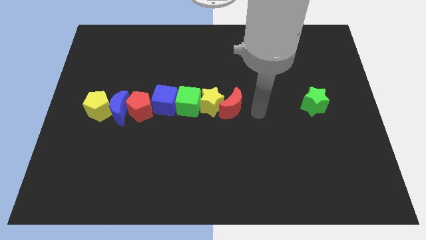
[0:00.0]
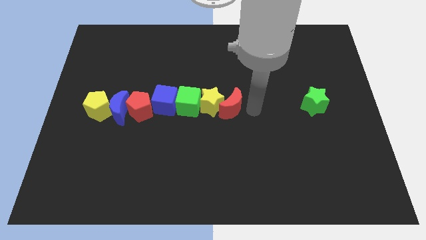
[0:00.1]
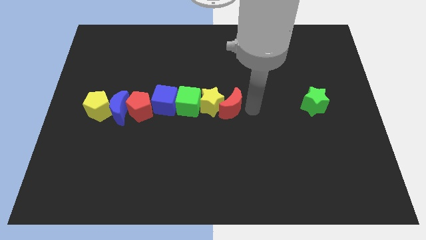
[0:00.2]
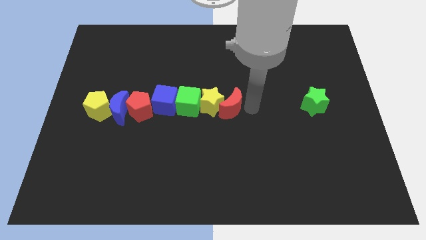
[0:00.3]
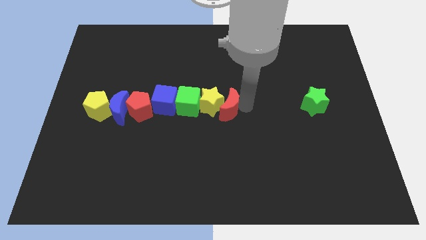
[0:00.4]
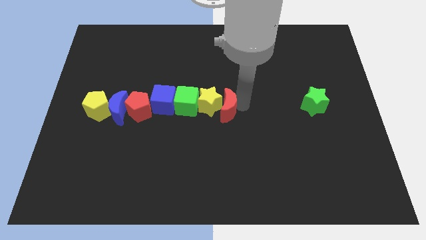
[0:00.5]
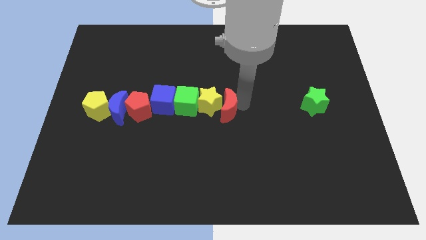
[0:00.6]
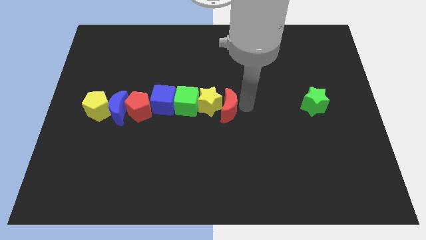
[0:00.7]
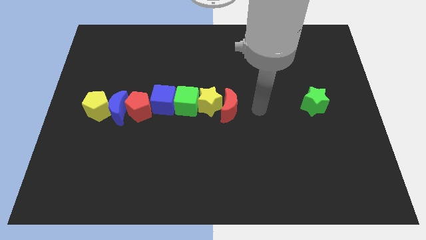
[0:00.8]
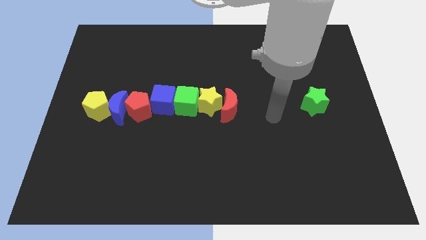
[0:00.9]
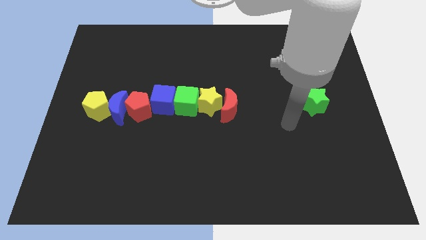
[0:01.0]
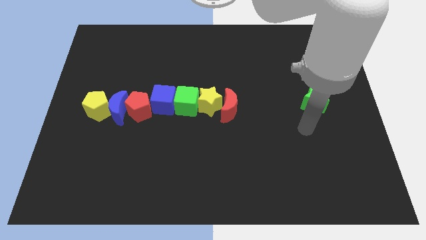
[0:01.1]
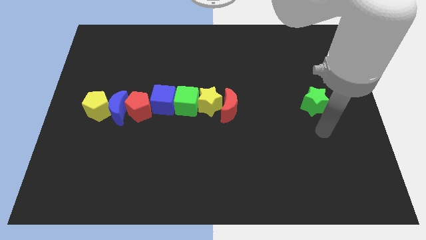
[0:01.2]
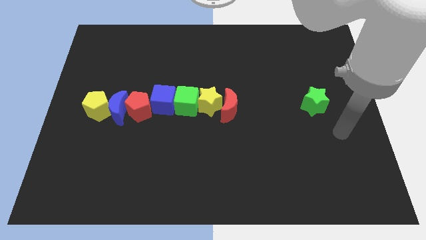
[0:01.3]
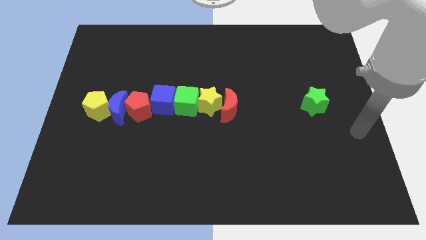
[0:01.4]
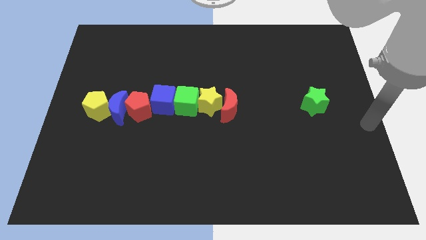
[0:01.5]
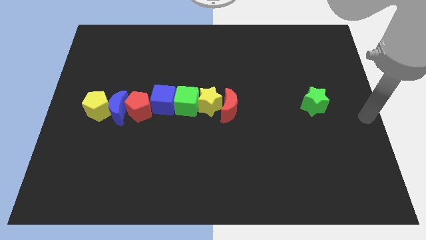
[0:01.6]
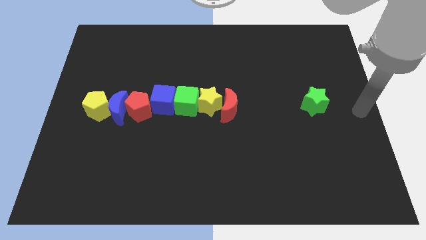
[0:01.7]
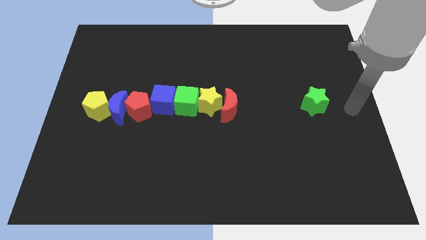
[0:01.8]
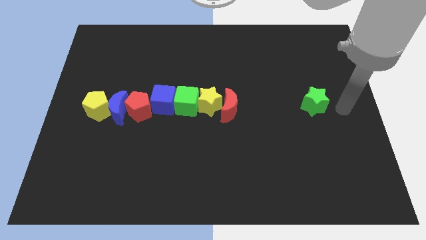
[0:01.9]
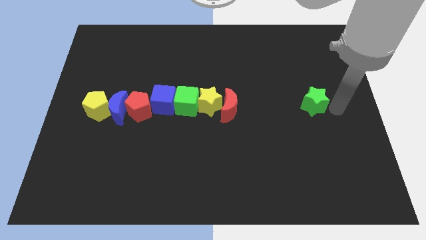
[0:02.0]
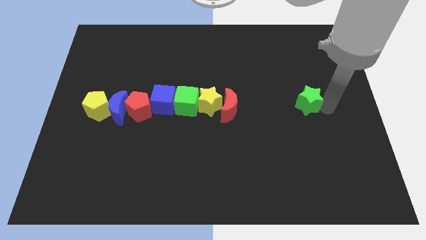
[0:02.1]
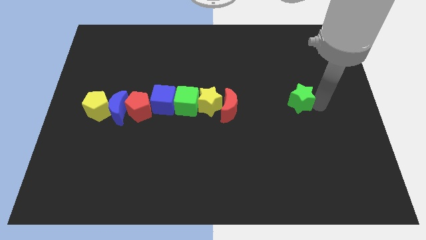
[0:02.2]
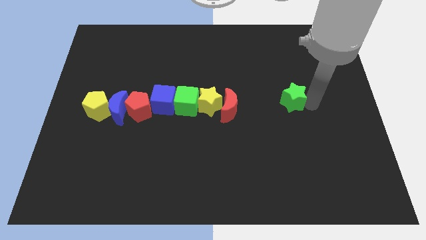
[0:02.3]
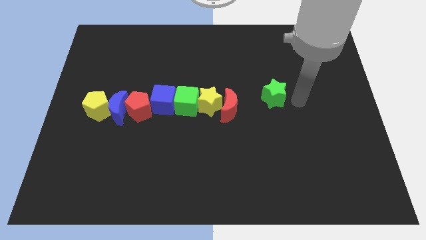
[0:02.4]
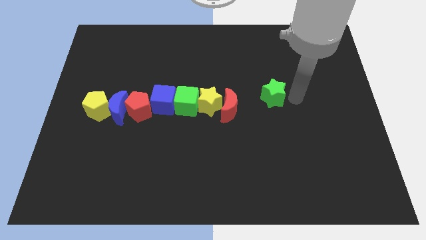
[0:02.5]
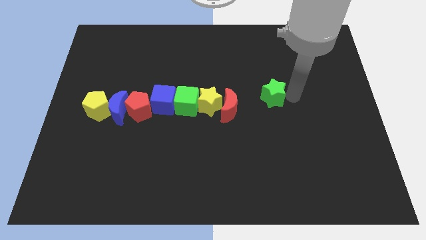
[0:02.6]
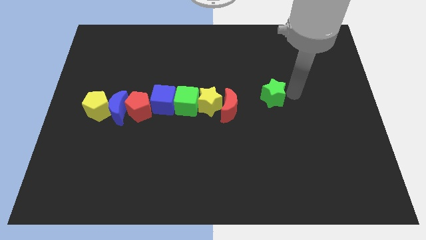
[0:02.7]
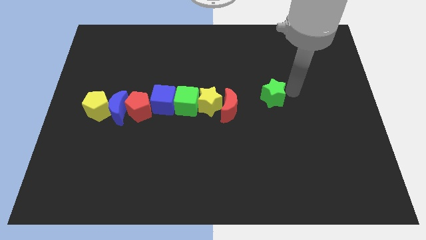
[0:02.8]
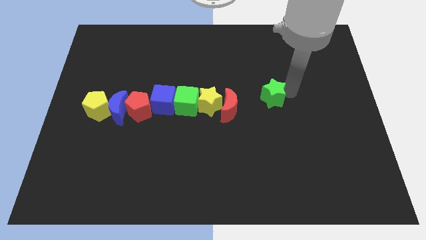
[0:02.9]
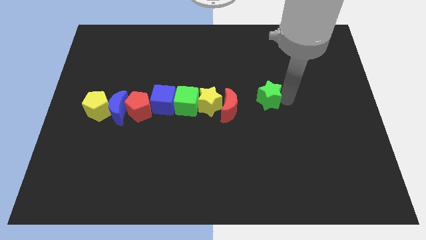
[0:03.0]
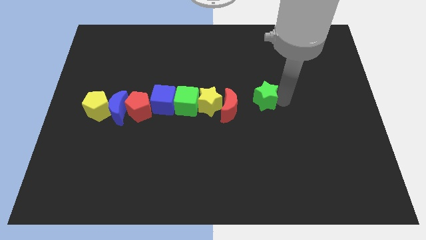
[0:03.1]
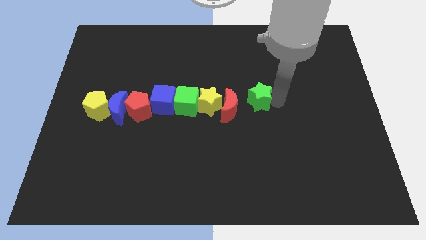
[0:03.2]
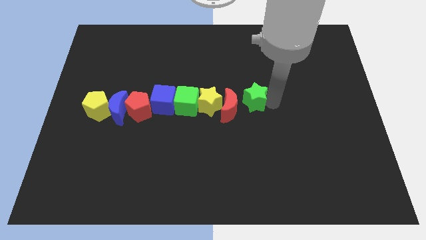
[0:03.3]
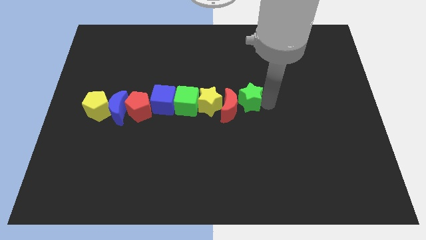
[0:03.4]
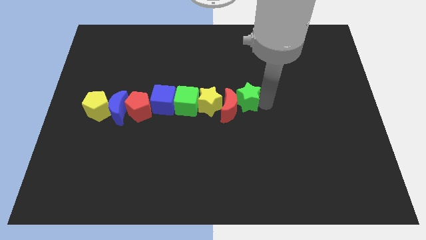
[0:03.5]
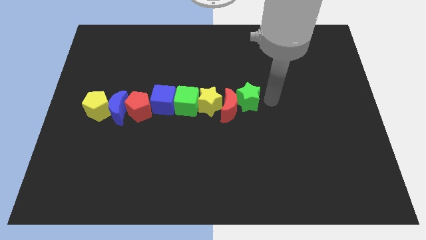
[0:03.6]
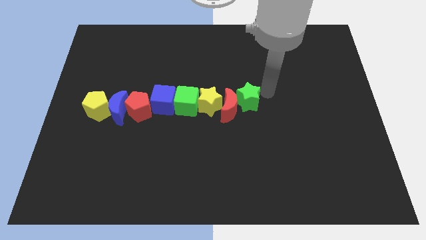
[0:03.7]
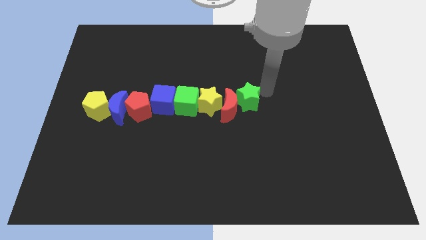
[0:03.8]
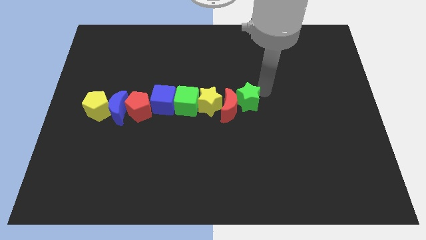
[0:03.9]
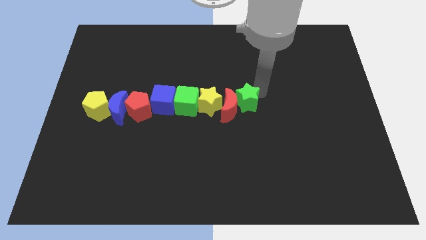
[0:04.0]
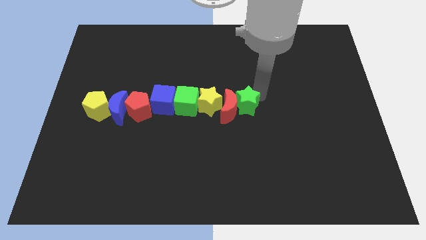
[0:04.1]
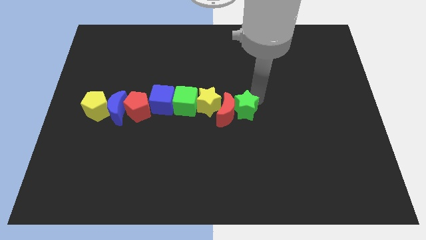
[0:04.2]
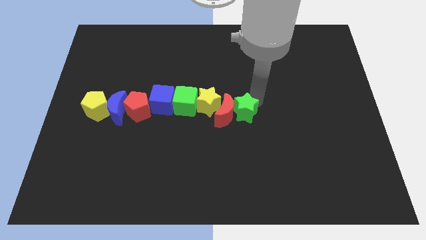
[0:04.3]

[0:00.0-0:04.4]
move the green star into the red crescent

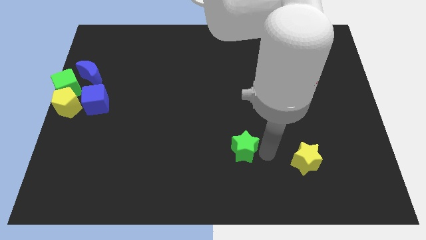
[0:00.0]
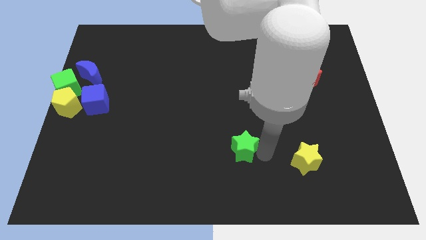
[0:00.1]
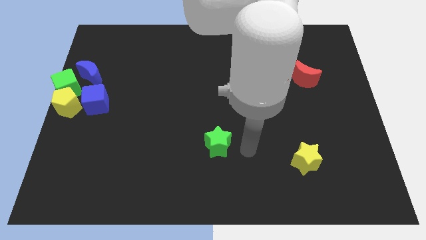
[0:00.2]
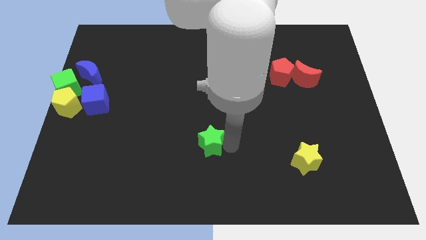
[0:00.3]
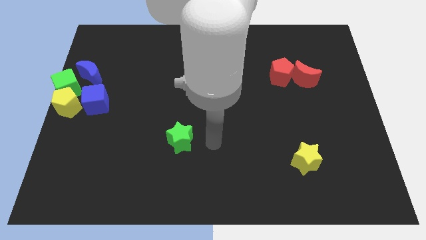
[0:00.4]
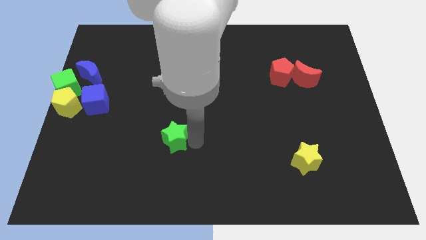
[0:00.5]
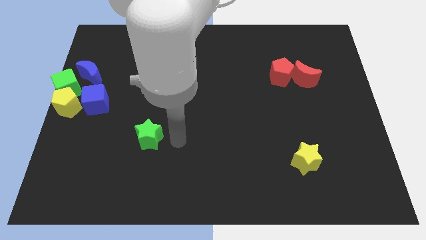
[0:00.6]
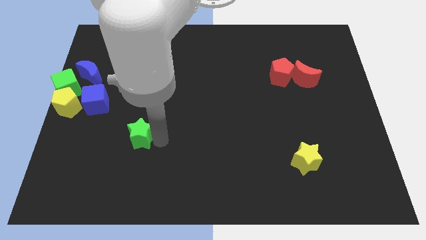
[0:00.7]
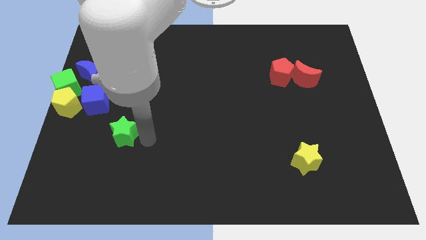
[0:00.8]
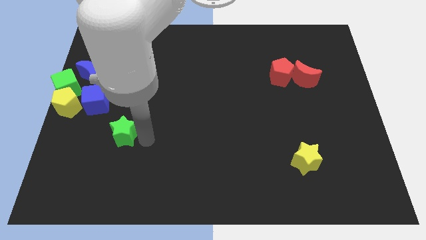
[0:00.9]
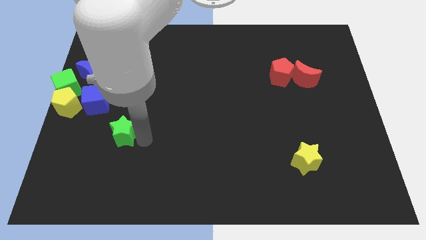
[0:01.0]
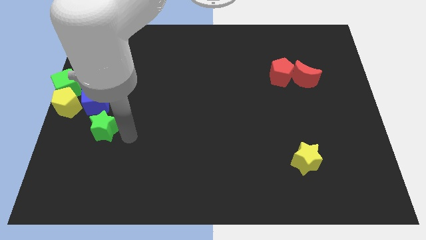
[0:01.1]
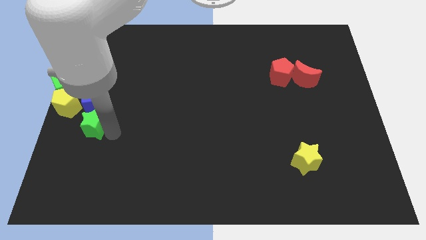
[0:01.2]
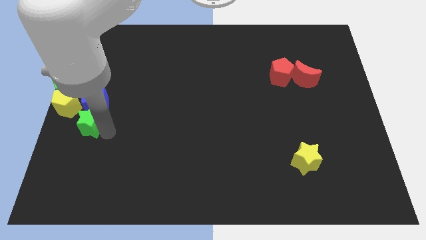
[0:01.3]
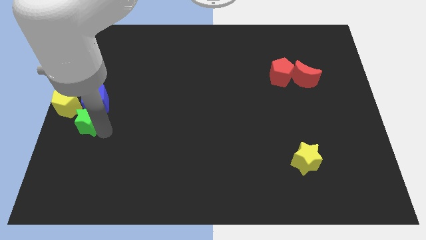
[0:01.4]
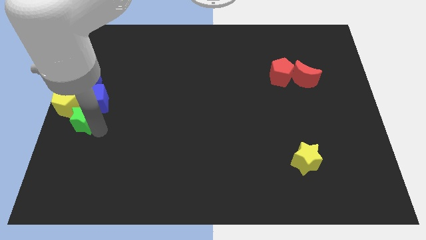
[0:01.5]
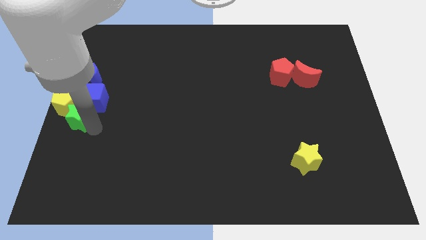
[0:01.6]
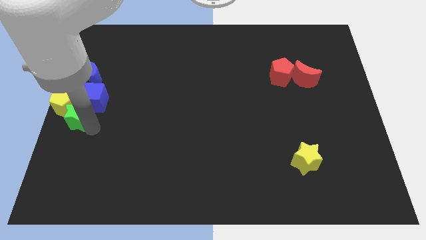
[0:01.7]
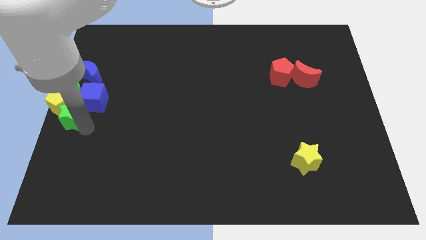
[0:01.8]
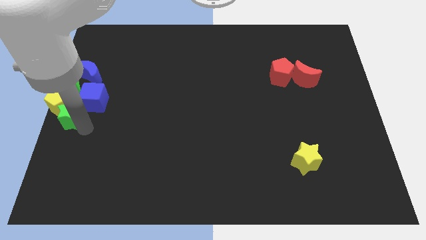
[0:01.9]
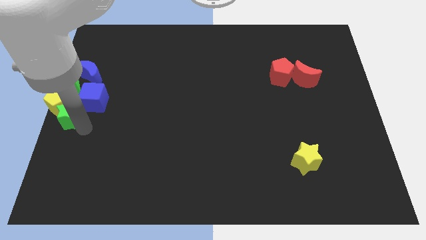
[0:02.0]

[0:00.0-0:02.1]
push the green star into the yellow pentagon

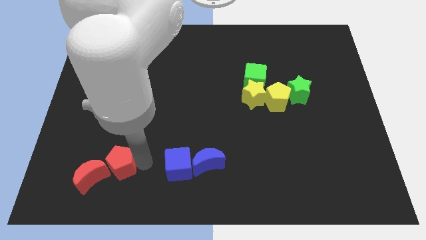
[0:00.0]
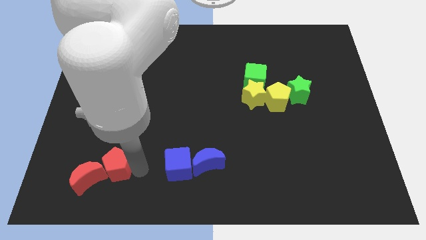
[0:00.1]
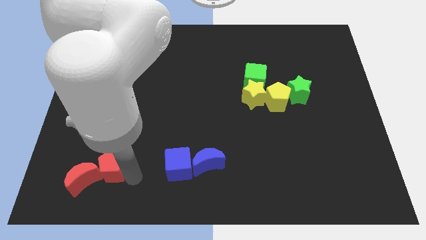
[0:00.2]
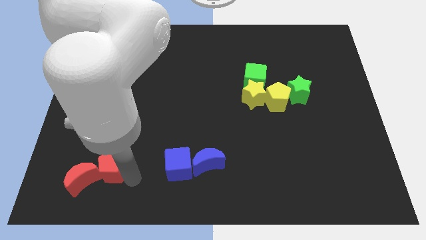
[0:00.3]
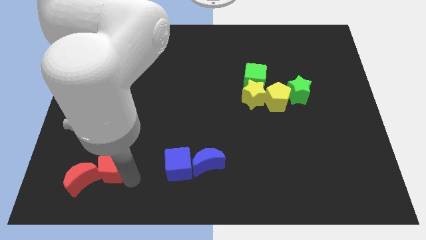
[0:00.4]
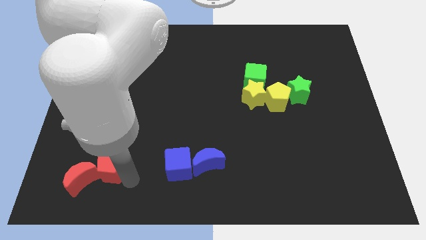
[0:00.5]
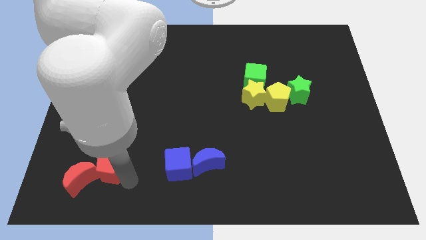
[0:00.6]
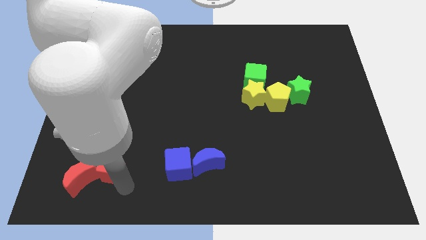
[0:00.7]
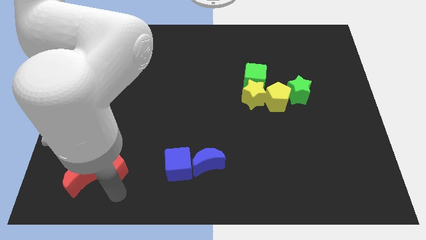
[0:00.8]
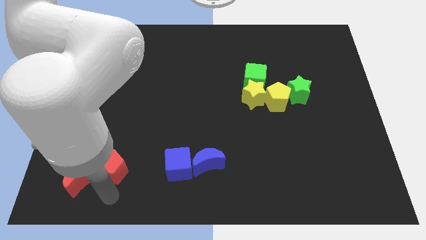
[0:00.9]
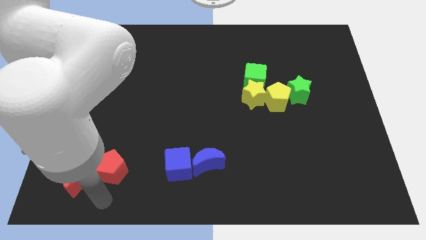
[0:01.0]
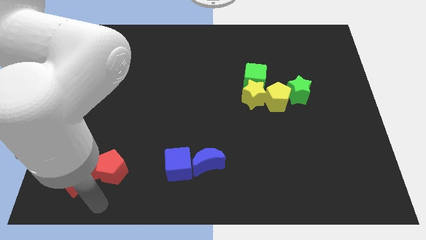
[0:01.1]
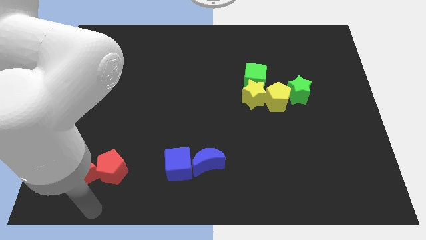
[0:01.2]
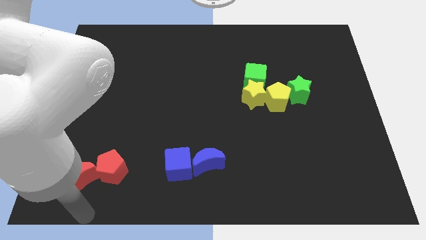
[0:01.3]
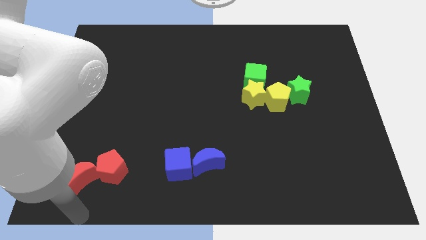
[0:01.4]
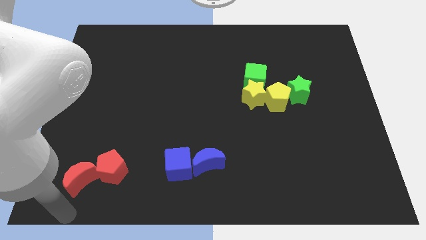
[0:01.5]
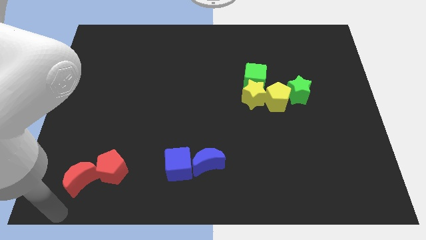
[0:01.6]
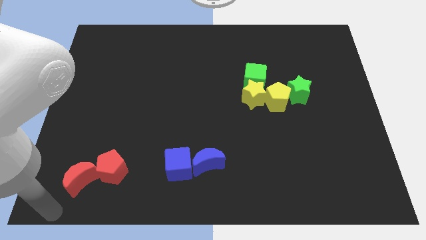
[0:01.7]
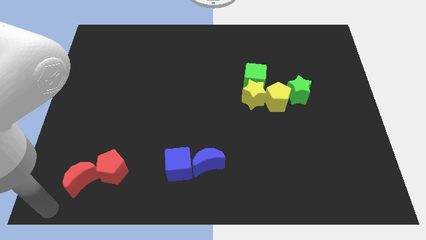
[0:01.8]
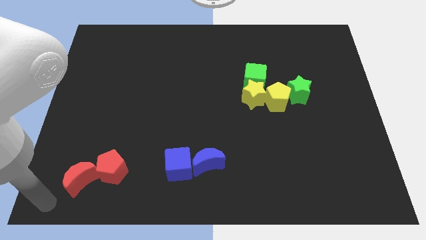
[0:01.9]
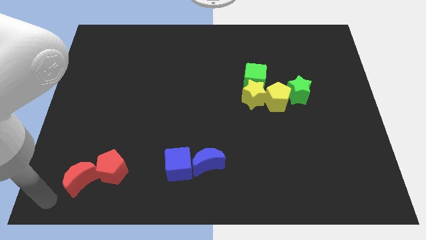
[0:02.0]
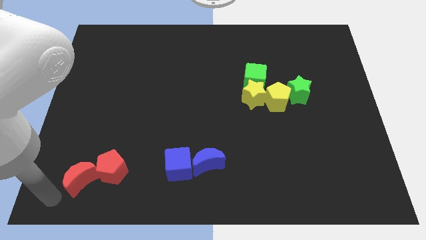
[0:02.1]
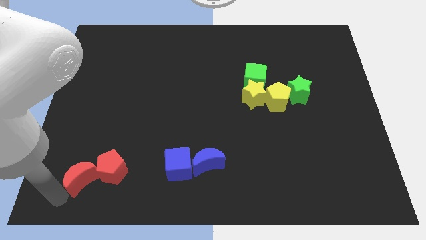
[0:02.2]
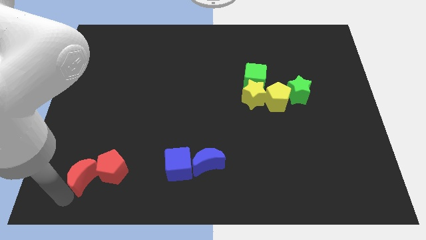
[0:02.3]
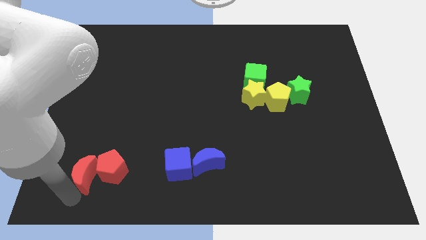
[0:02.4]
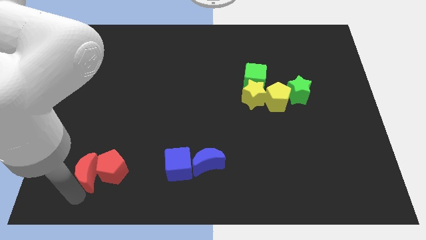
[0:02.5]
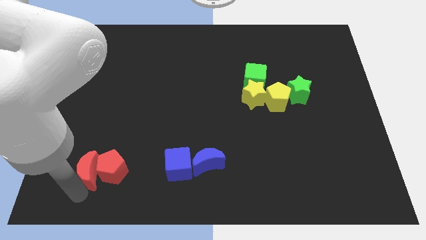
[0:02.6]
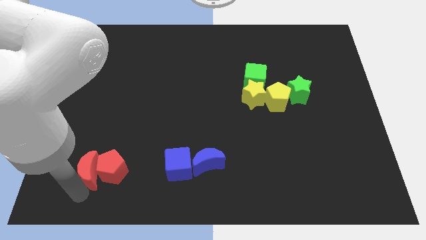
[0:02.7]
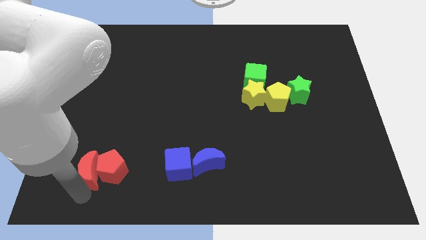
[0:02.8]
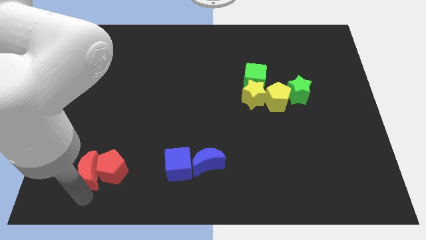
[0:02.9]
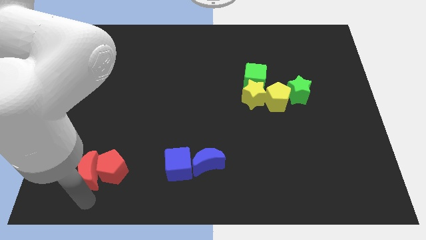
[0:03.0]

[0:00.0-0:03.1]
slightly adjust the red moon into the red pentagon
